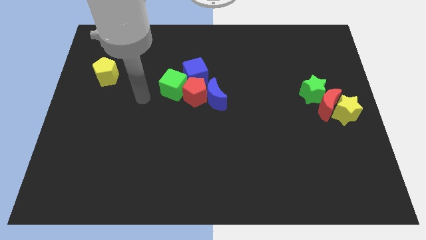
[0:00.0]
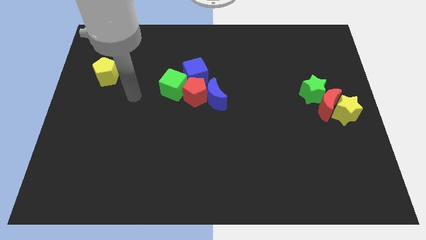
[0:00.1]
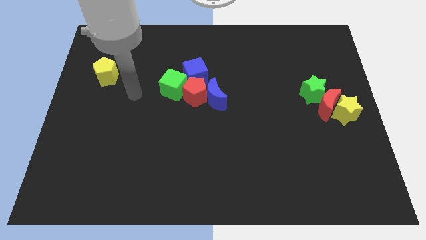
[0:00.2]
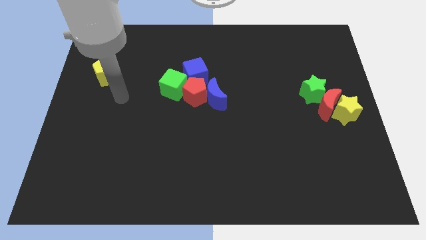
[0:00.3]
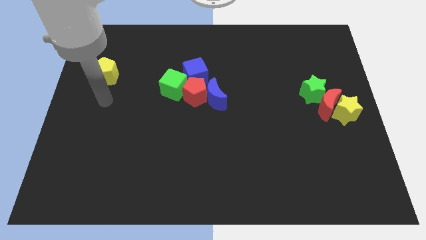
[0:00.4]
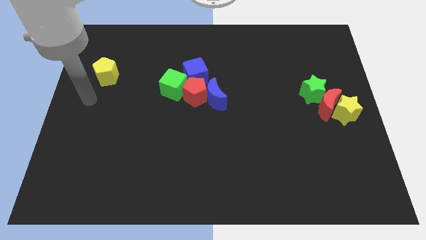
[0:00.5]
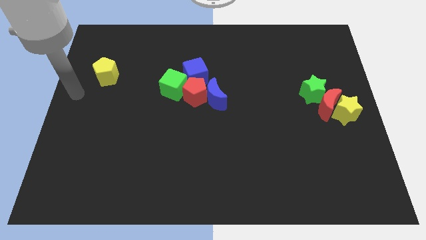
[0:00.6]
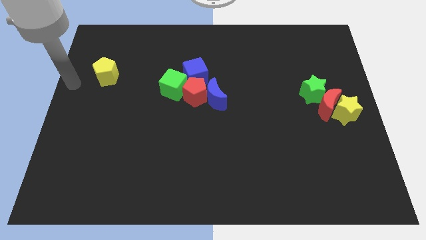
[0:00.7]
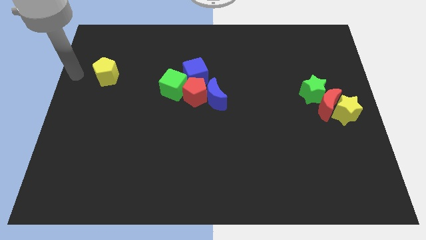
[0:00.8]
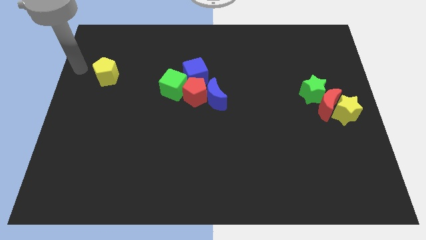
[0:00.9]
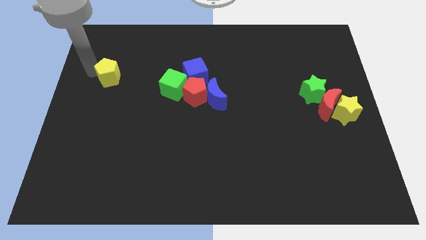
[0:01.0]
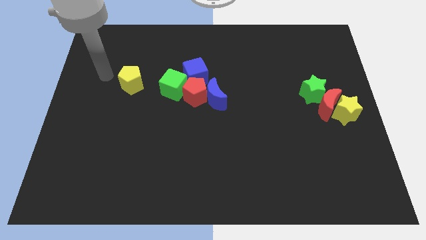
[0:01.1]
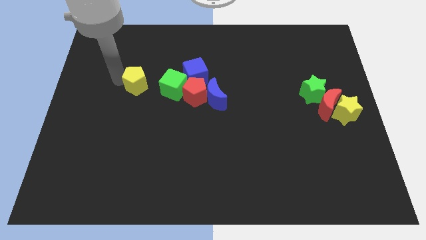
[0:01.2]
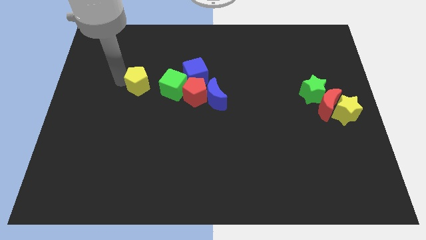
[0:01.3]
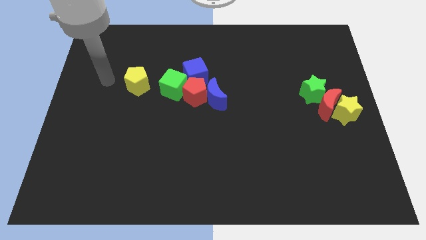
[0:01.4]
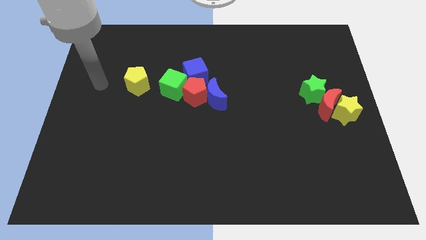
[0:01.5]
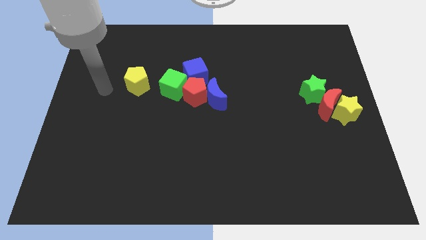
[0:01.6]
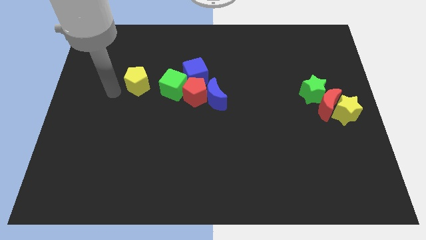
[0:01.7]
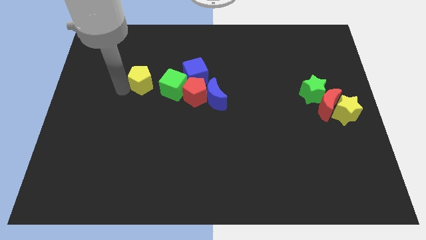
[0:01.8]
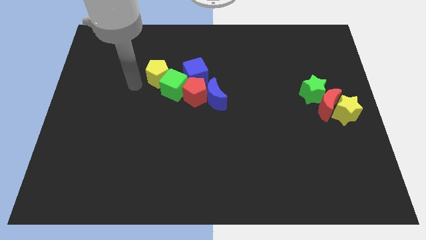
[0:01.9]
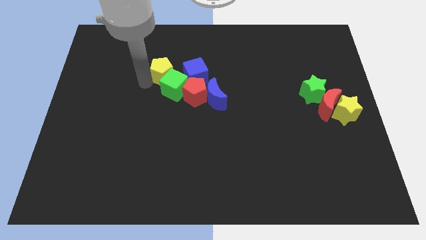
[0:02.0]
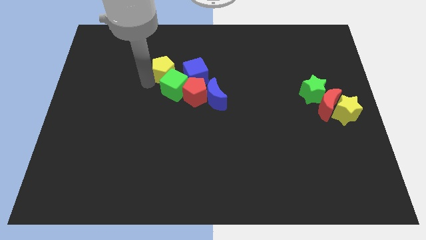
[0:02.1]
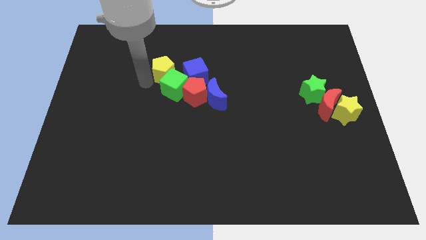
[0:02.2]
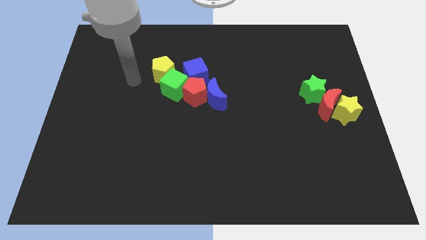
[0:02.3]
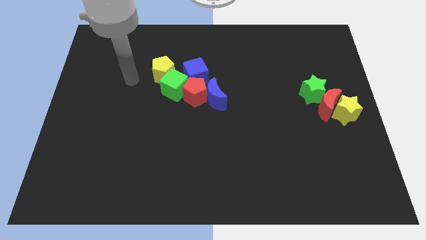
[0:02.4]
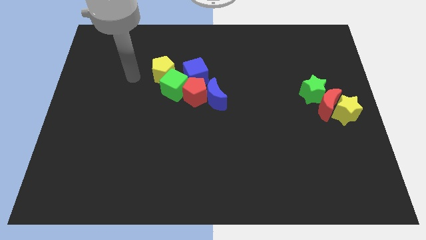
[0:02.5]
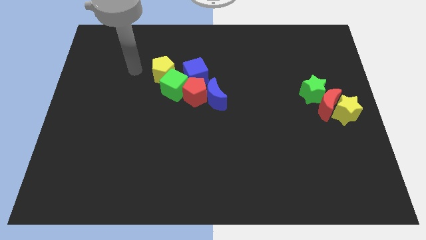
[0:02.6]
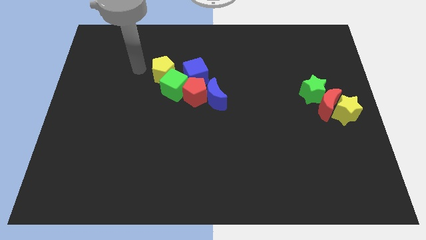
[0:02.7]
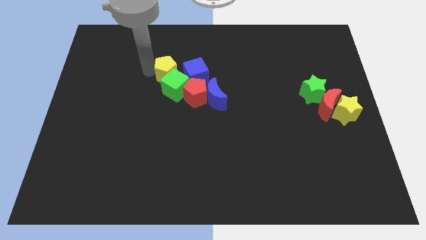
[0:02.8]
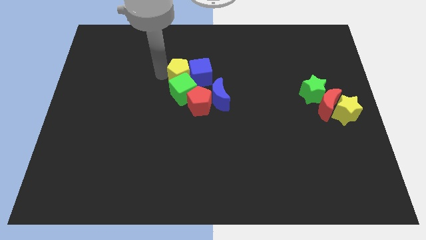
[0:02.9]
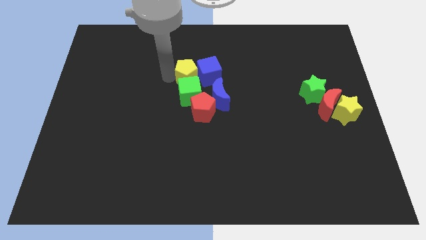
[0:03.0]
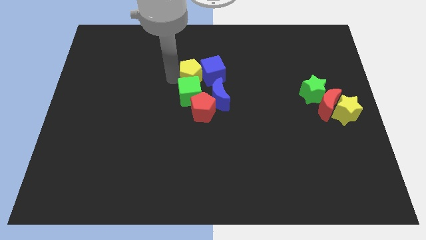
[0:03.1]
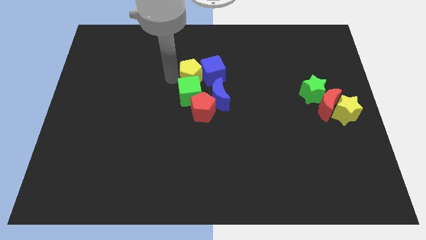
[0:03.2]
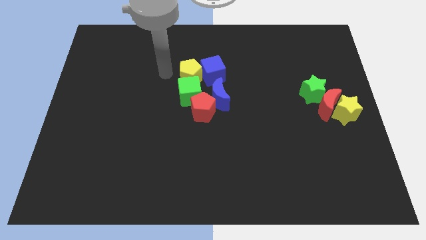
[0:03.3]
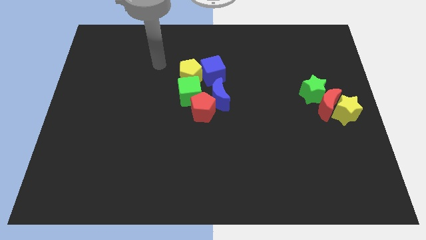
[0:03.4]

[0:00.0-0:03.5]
push the yellow pentagon into the group of blocks at the top side of the table

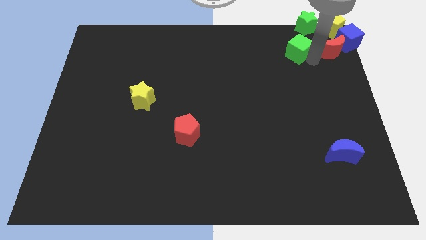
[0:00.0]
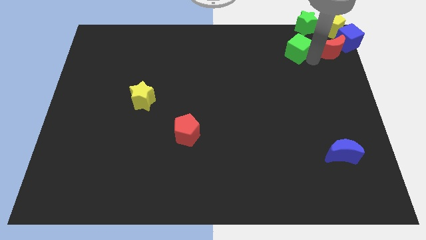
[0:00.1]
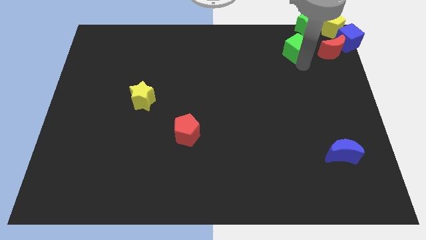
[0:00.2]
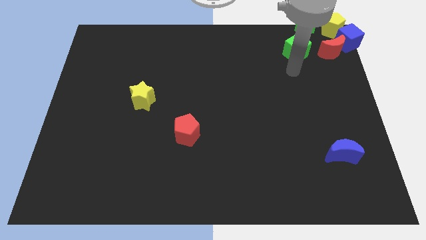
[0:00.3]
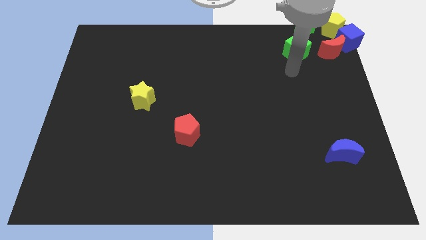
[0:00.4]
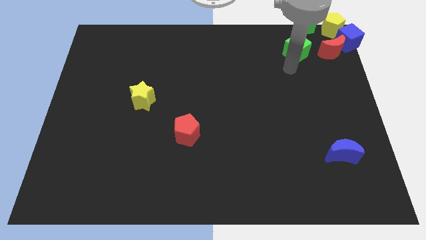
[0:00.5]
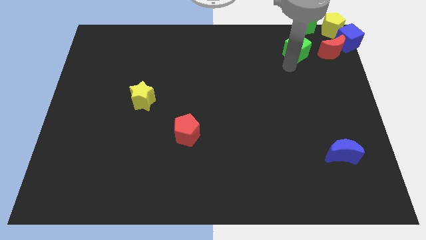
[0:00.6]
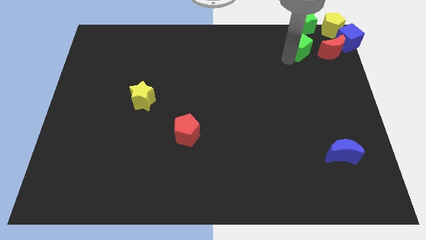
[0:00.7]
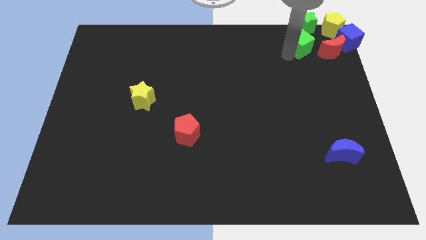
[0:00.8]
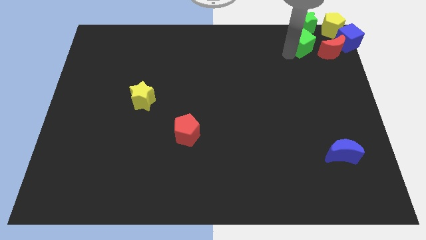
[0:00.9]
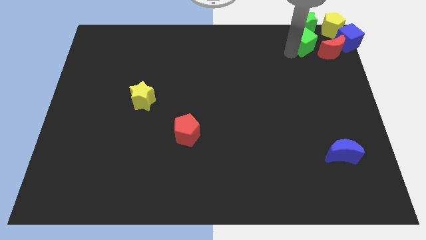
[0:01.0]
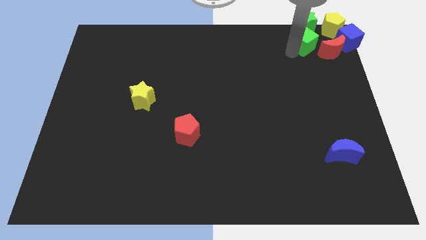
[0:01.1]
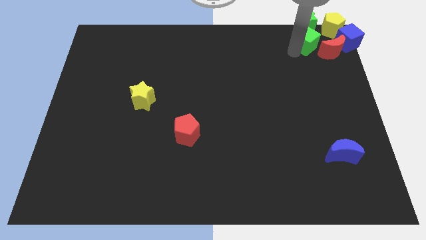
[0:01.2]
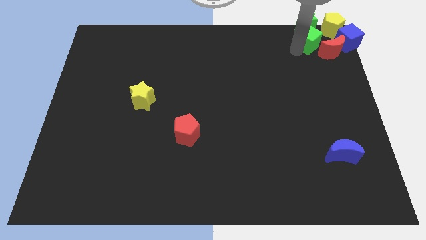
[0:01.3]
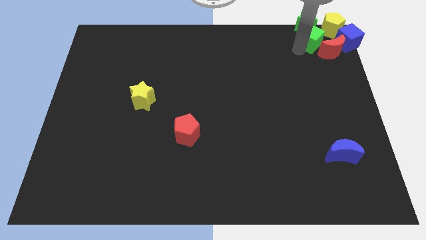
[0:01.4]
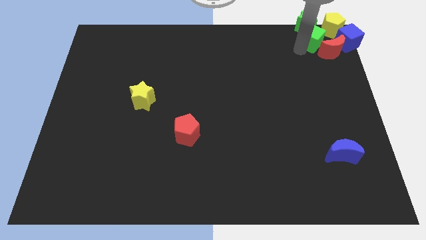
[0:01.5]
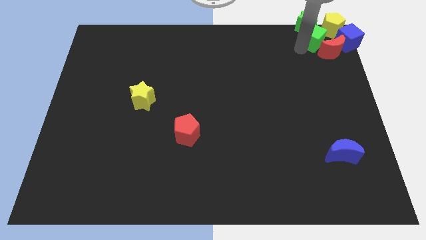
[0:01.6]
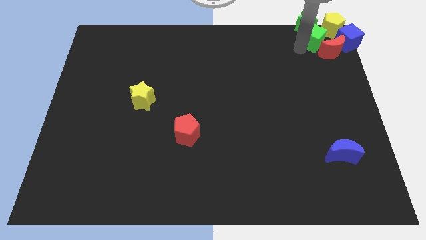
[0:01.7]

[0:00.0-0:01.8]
push the green cube close to the group of blocks at the top right corner of the board

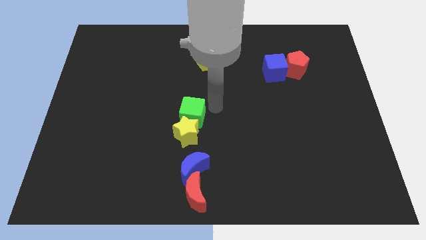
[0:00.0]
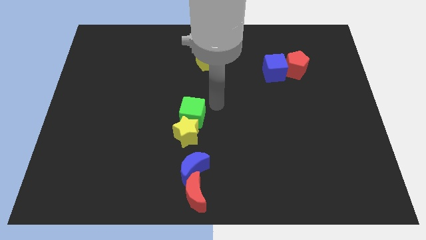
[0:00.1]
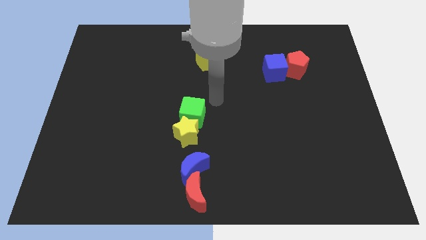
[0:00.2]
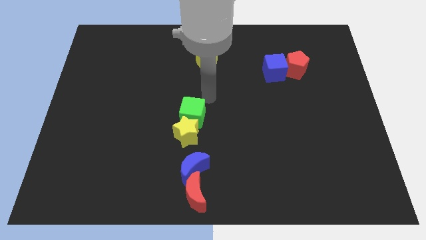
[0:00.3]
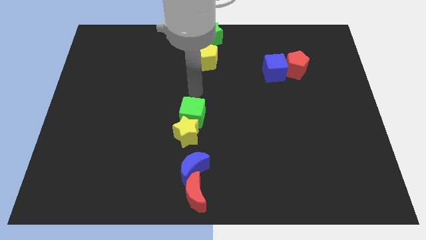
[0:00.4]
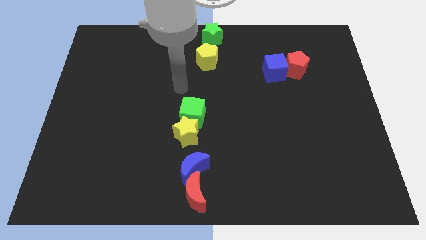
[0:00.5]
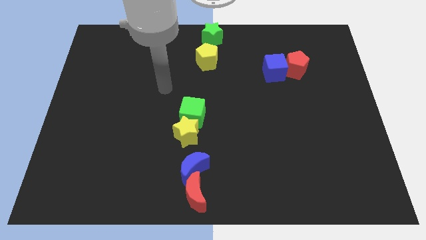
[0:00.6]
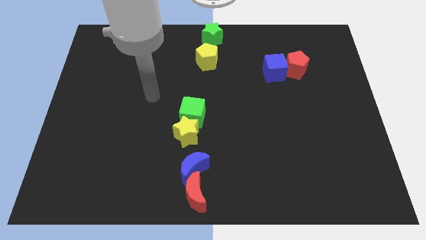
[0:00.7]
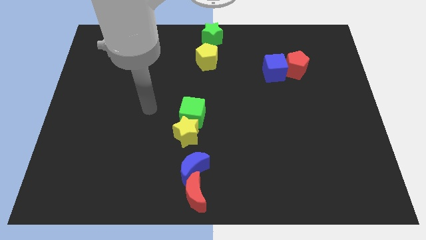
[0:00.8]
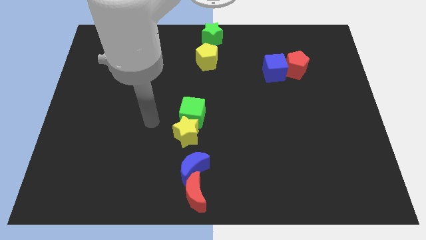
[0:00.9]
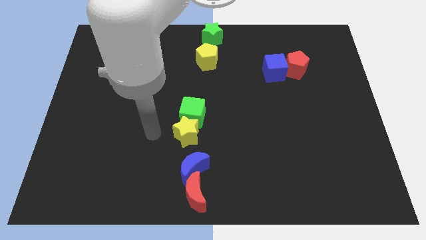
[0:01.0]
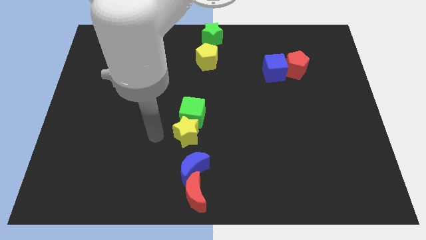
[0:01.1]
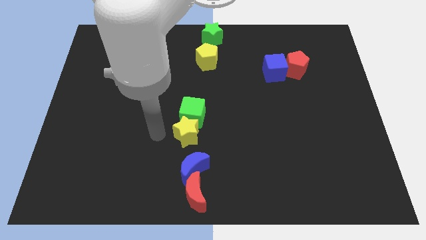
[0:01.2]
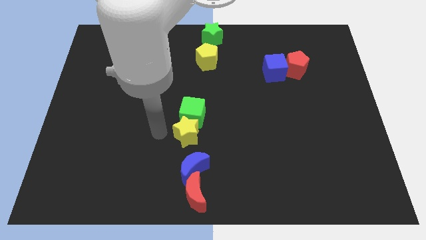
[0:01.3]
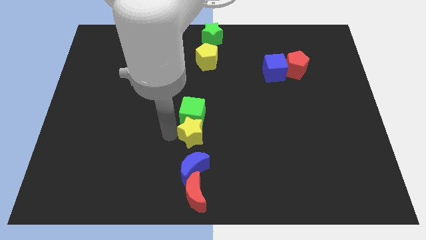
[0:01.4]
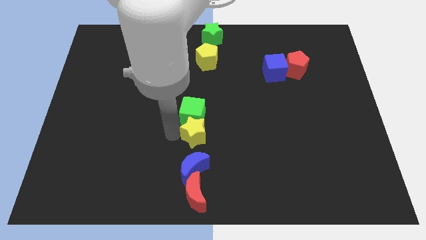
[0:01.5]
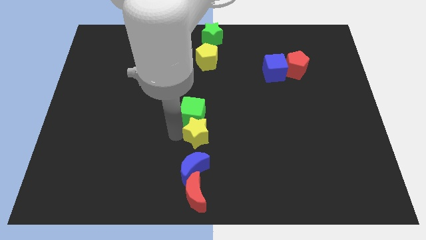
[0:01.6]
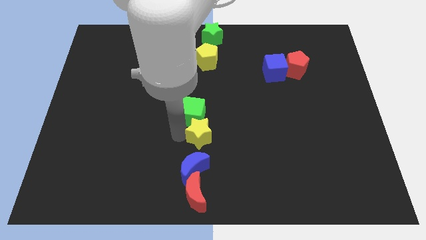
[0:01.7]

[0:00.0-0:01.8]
push the yellow star slightly to its right

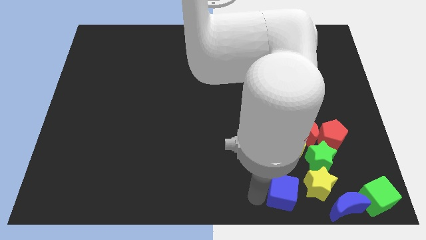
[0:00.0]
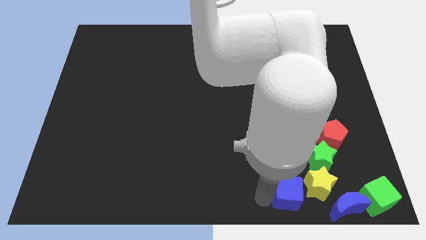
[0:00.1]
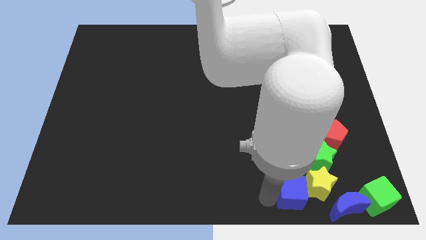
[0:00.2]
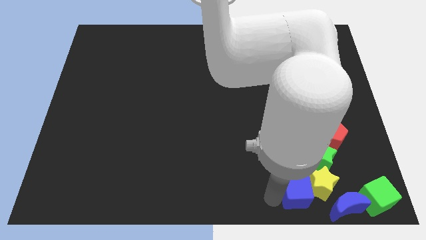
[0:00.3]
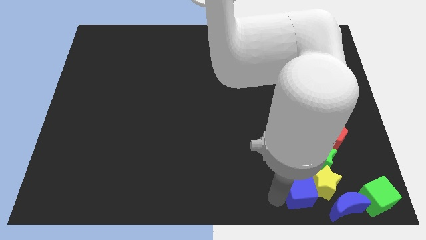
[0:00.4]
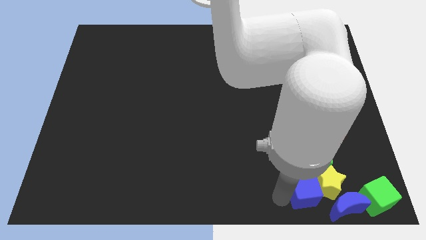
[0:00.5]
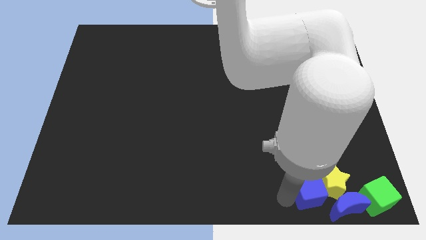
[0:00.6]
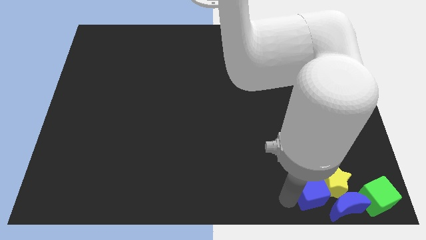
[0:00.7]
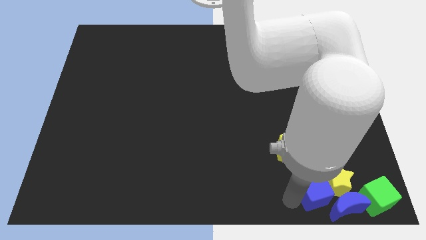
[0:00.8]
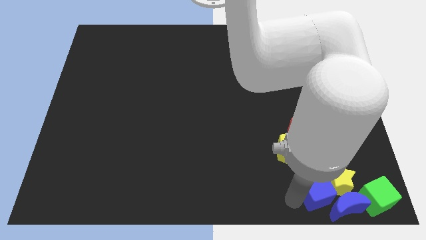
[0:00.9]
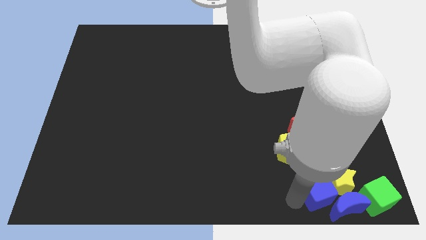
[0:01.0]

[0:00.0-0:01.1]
slide blue cube into yellow star

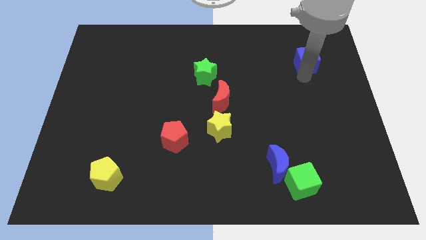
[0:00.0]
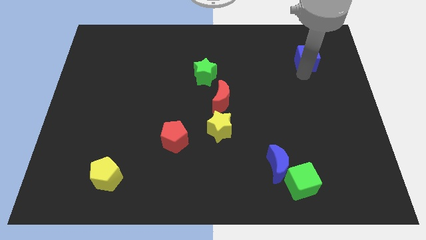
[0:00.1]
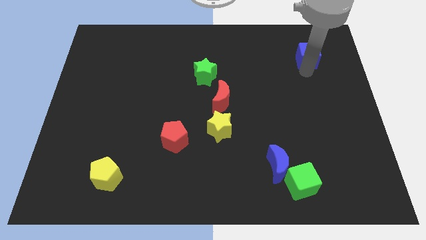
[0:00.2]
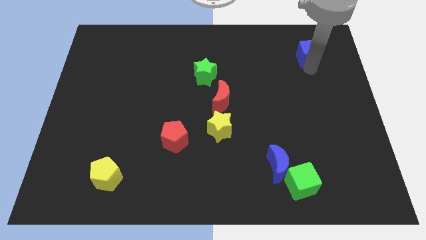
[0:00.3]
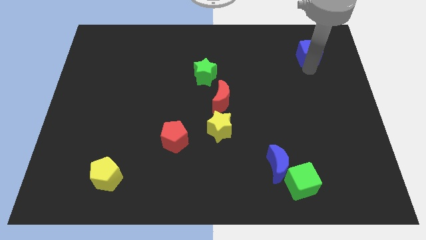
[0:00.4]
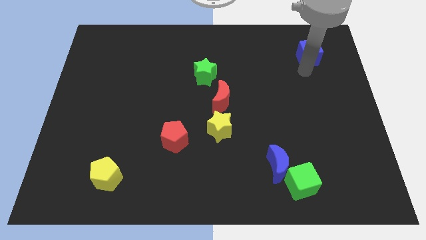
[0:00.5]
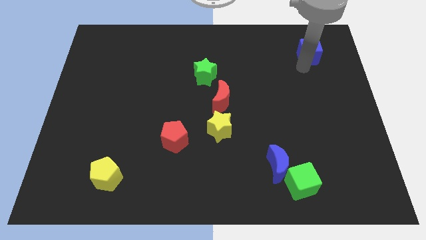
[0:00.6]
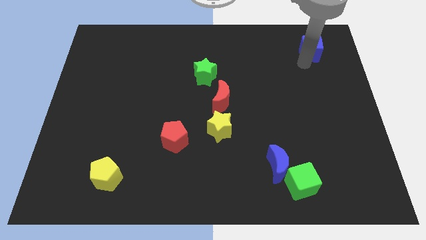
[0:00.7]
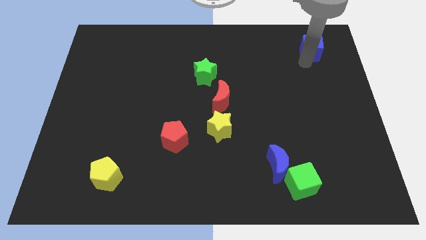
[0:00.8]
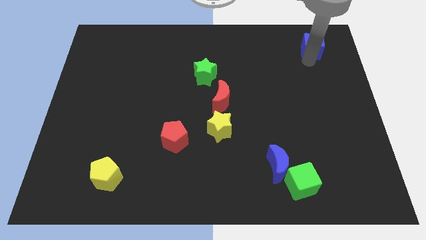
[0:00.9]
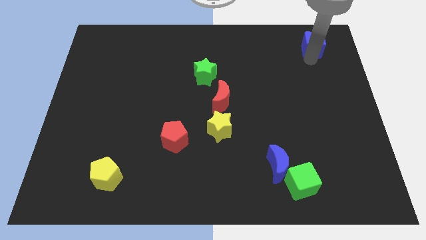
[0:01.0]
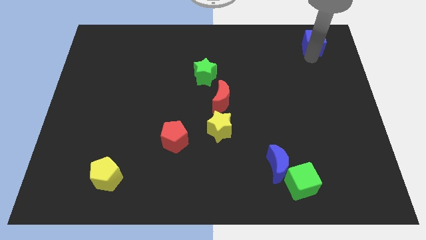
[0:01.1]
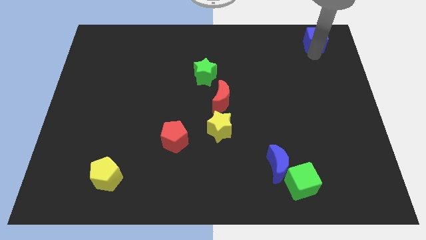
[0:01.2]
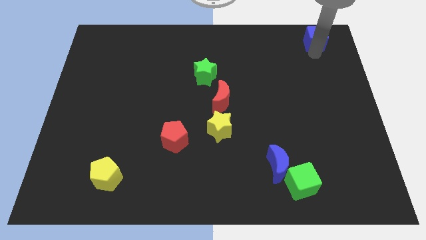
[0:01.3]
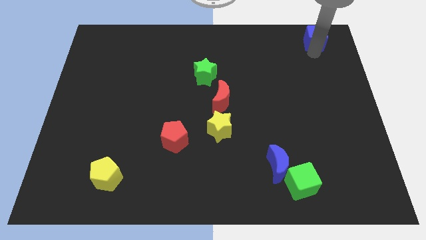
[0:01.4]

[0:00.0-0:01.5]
push the blue cube slightly towards up
